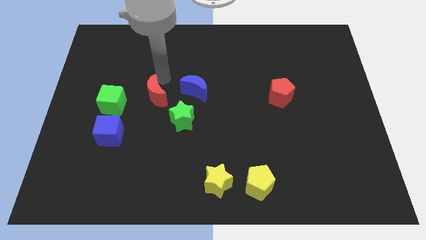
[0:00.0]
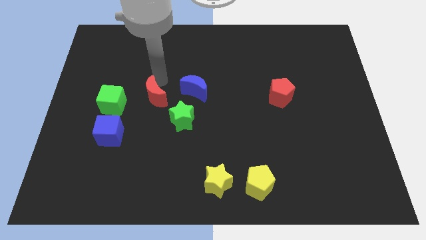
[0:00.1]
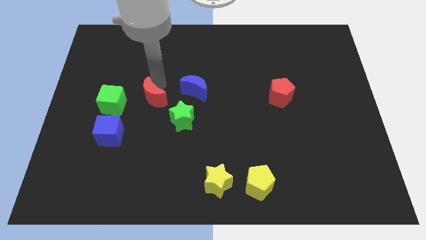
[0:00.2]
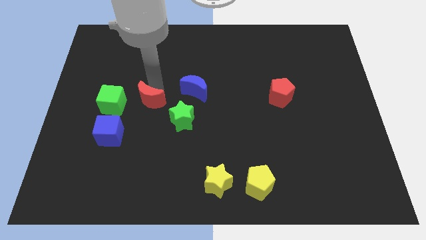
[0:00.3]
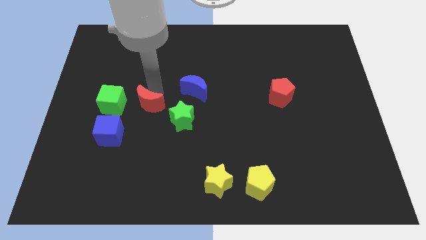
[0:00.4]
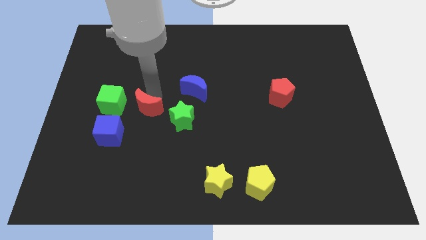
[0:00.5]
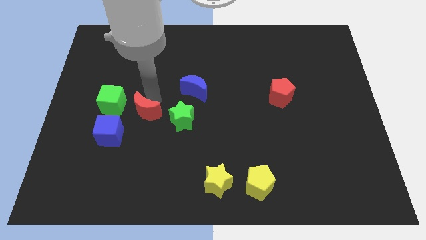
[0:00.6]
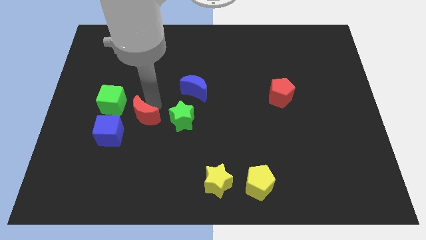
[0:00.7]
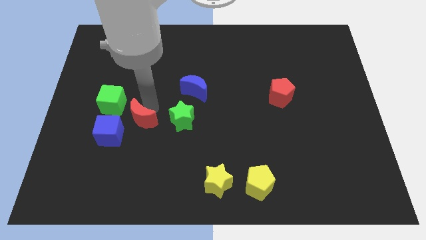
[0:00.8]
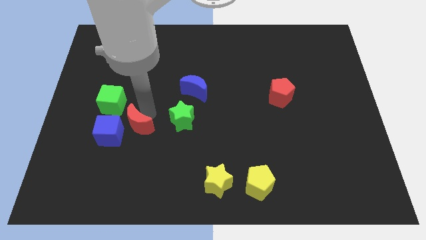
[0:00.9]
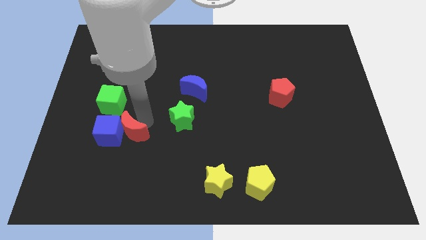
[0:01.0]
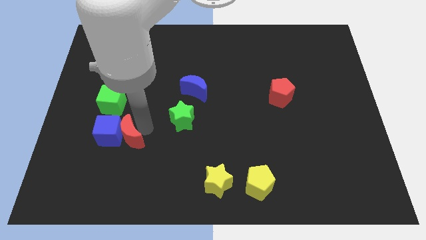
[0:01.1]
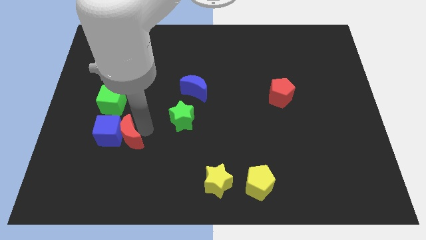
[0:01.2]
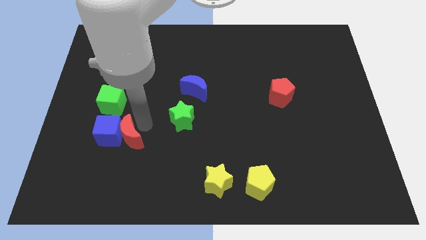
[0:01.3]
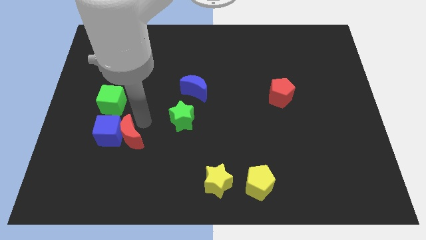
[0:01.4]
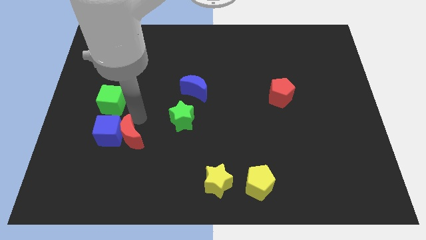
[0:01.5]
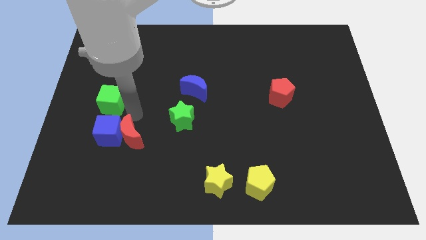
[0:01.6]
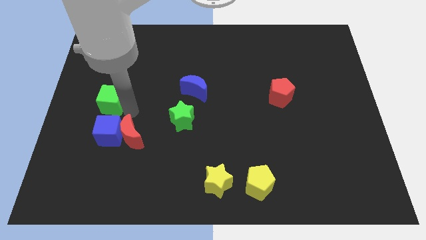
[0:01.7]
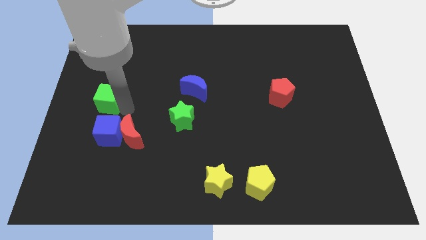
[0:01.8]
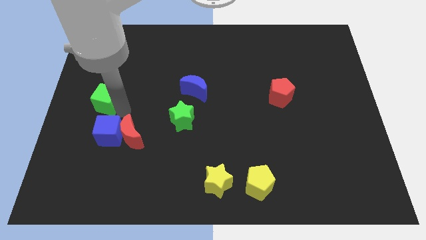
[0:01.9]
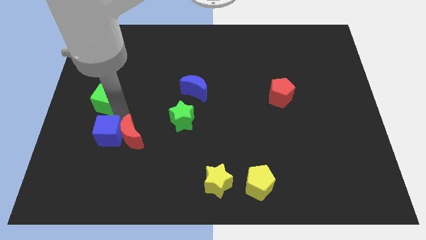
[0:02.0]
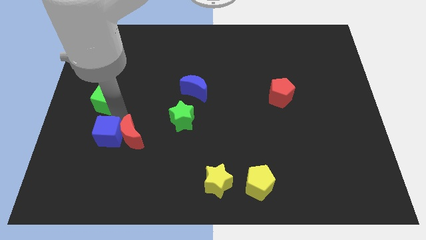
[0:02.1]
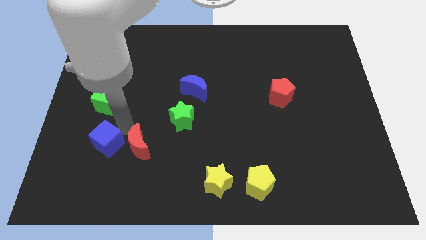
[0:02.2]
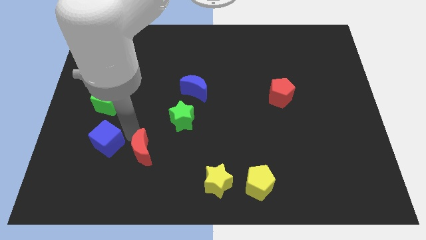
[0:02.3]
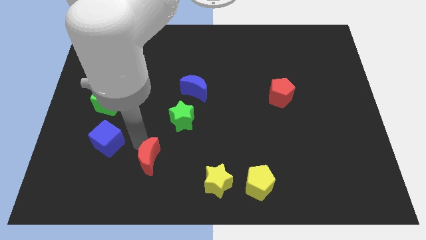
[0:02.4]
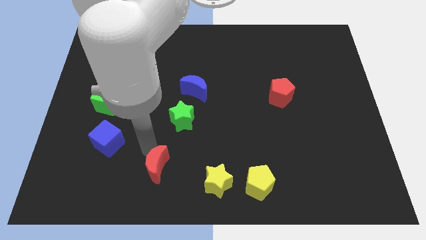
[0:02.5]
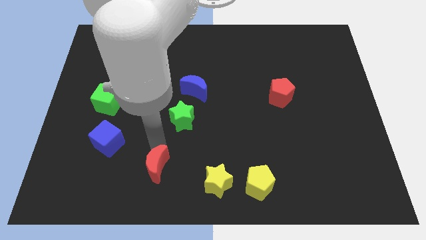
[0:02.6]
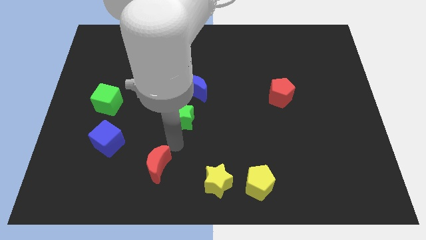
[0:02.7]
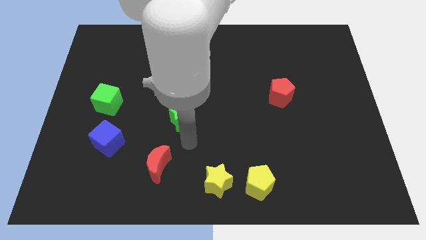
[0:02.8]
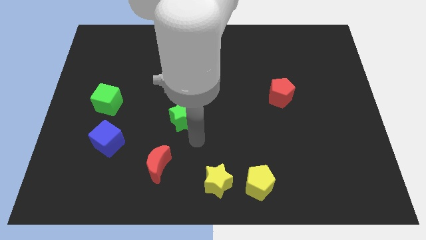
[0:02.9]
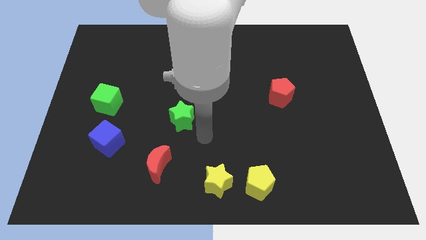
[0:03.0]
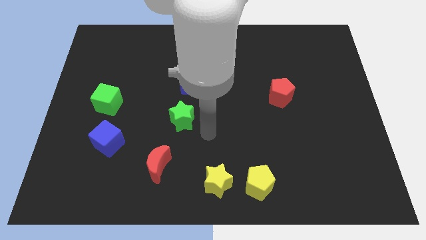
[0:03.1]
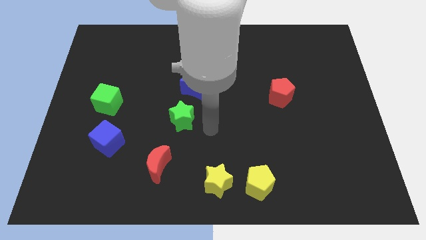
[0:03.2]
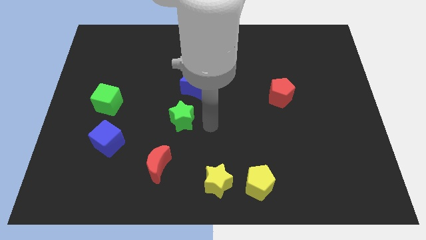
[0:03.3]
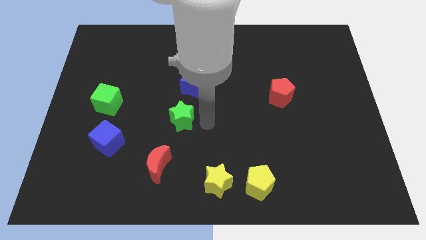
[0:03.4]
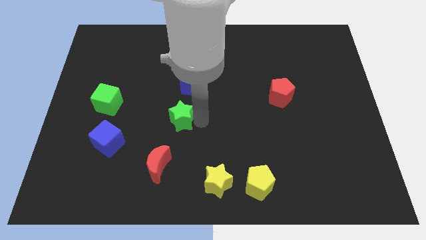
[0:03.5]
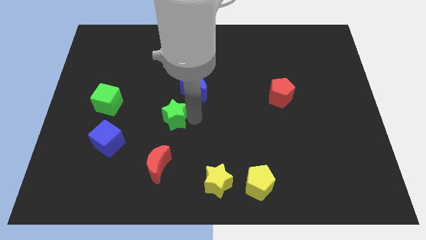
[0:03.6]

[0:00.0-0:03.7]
slide the red crescent diagonally bottom right to the blue cube

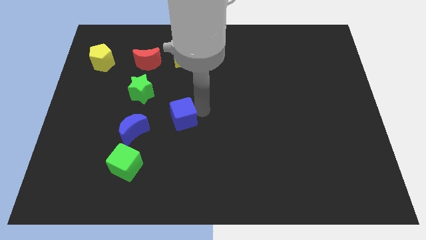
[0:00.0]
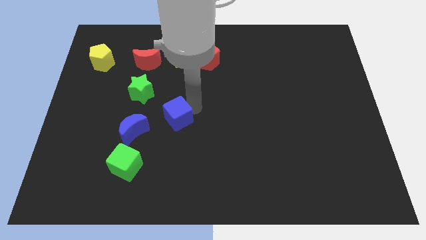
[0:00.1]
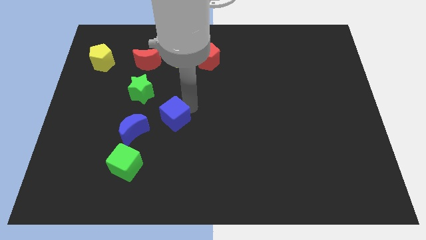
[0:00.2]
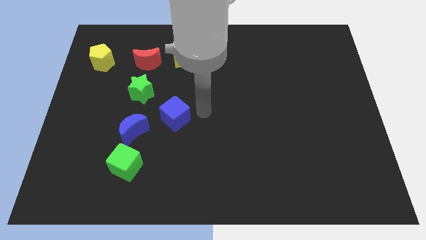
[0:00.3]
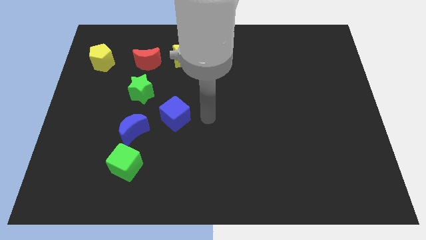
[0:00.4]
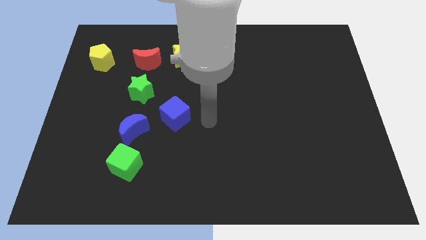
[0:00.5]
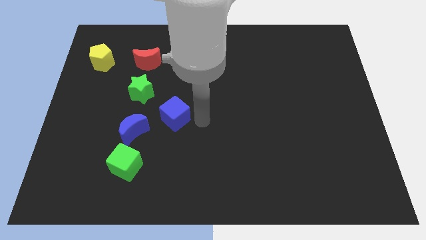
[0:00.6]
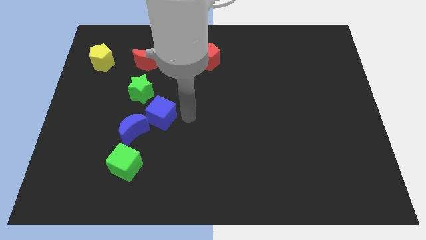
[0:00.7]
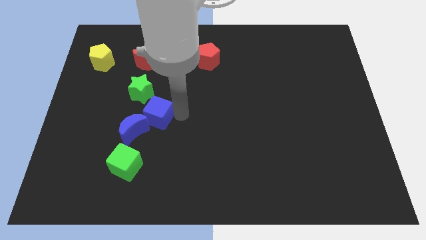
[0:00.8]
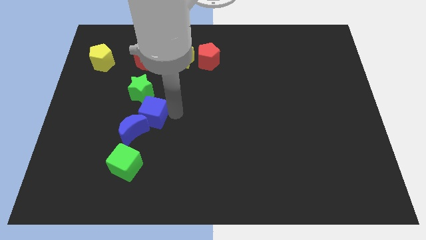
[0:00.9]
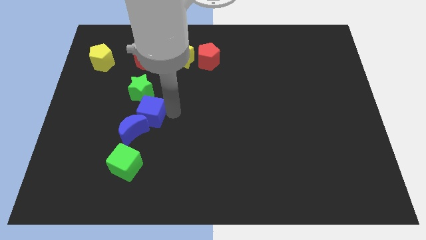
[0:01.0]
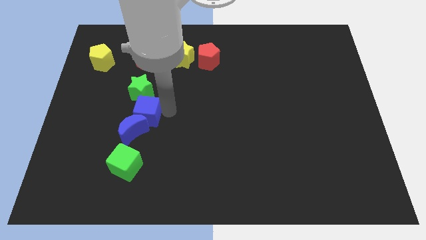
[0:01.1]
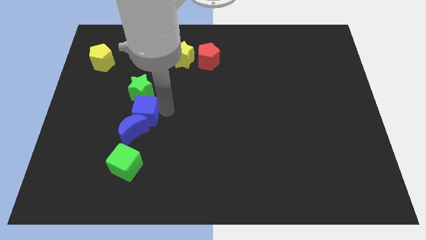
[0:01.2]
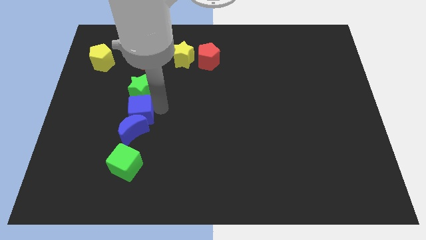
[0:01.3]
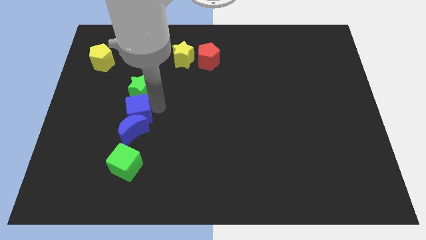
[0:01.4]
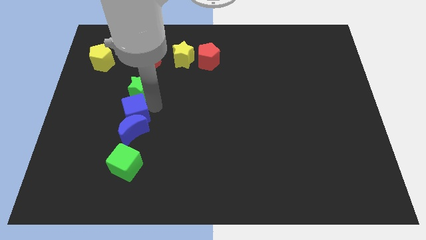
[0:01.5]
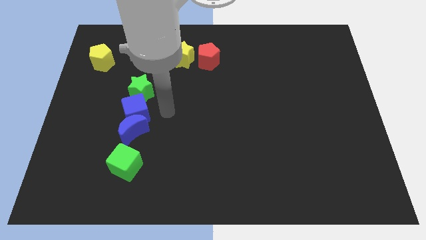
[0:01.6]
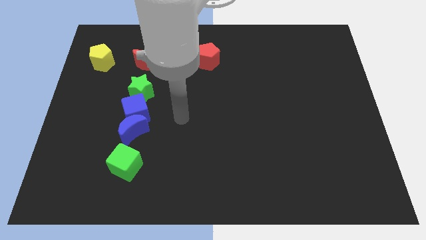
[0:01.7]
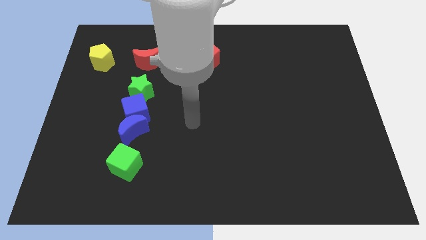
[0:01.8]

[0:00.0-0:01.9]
place blue cube between green star and blue moon

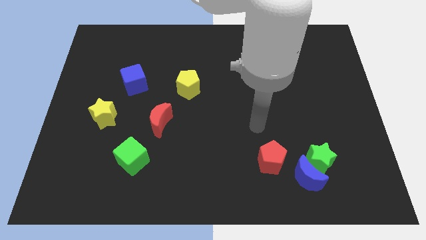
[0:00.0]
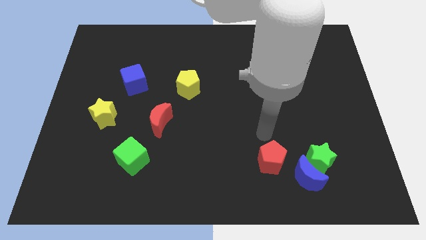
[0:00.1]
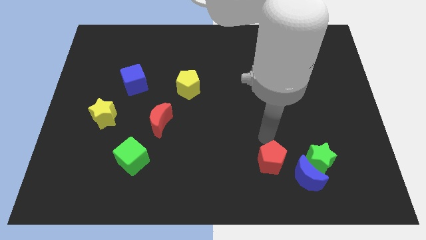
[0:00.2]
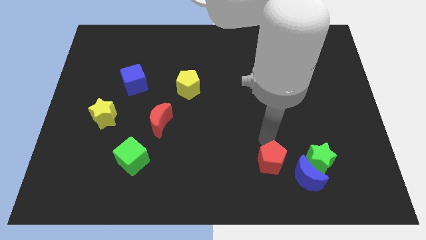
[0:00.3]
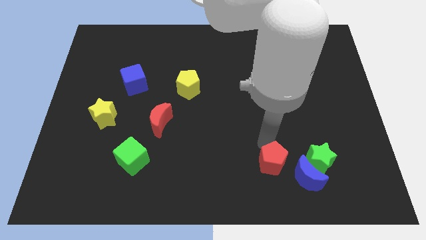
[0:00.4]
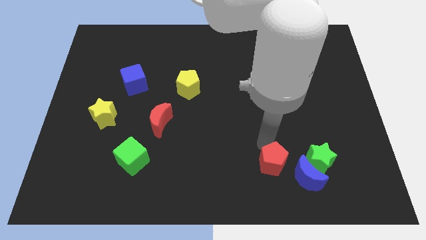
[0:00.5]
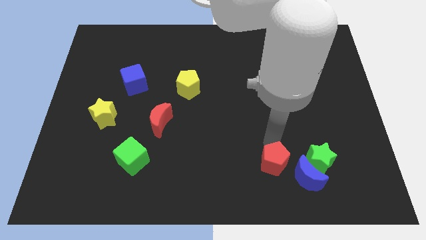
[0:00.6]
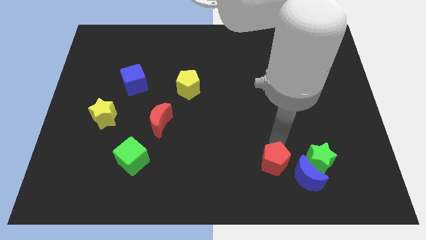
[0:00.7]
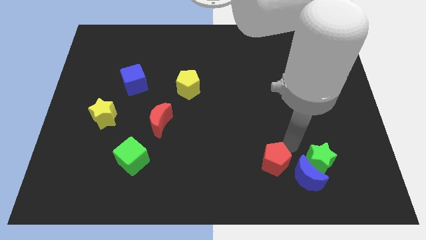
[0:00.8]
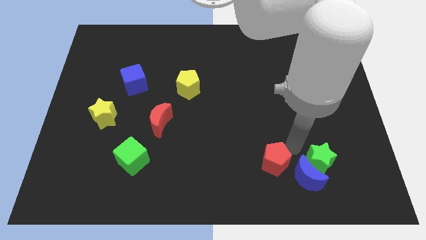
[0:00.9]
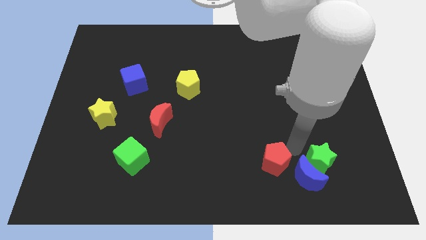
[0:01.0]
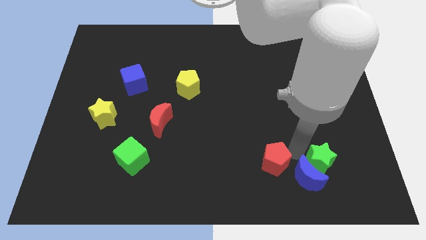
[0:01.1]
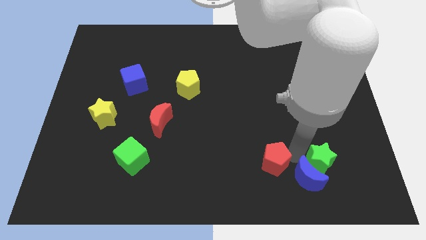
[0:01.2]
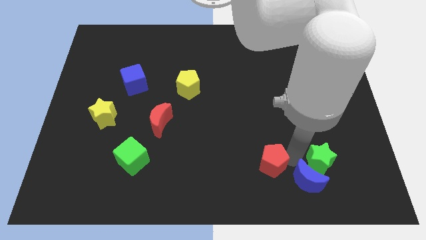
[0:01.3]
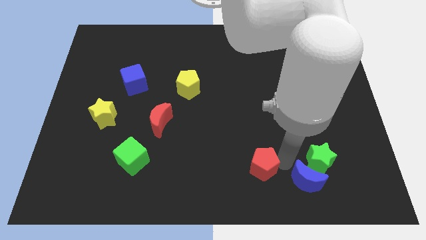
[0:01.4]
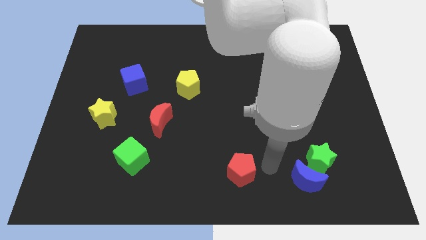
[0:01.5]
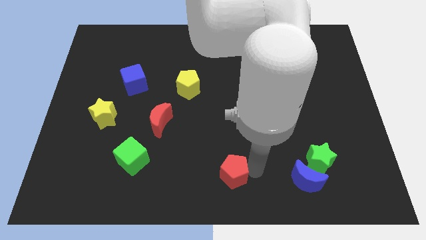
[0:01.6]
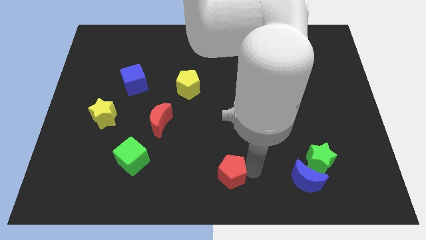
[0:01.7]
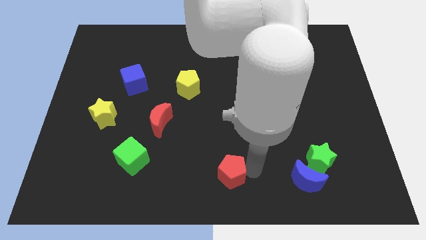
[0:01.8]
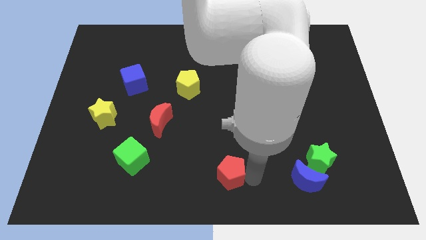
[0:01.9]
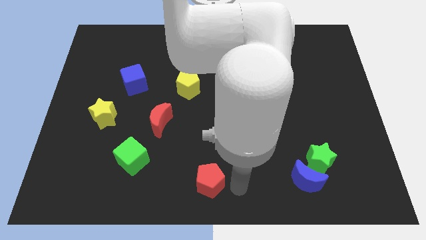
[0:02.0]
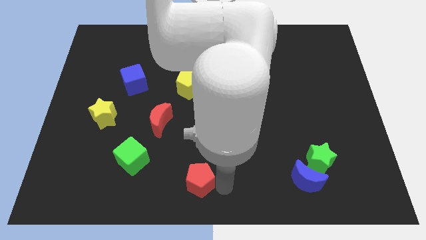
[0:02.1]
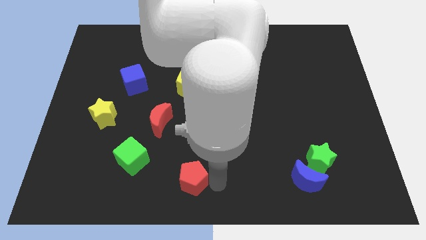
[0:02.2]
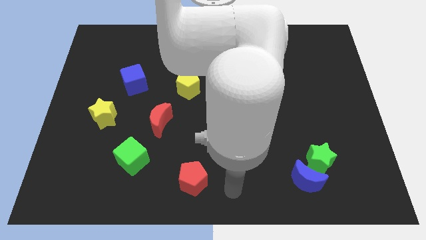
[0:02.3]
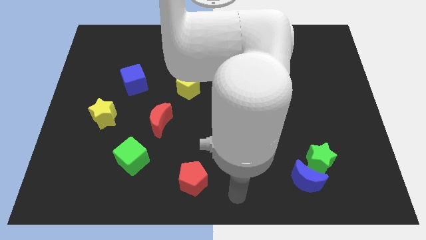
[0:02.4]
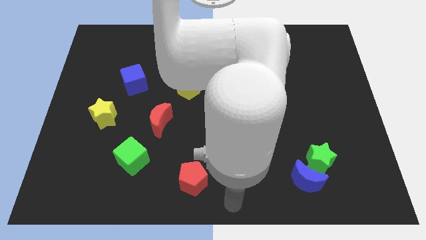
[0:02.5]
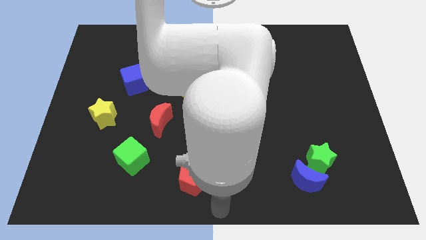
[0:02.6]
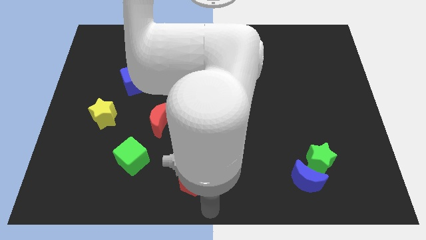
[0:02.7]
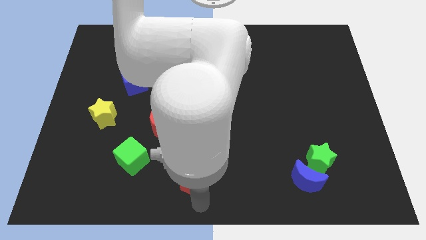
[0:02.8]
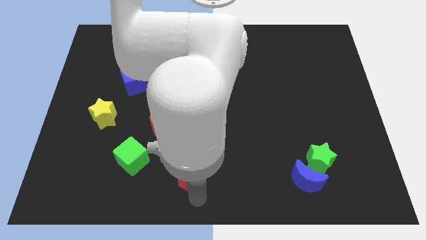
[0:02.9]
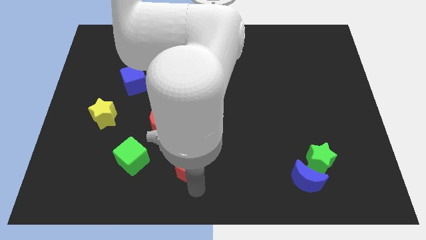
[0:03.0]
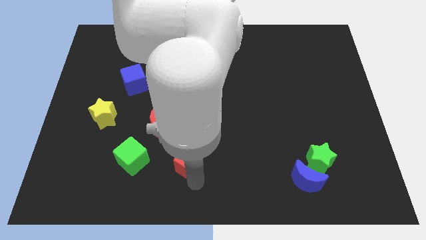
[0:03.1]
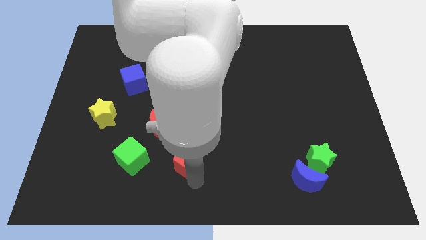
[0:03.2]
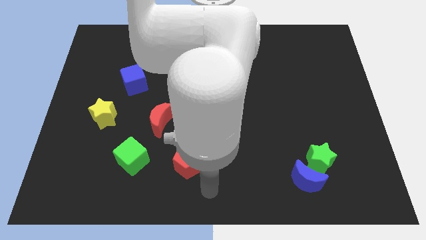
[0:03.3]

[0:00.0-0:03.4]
put red pentagon parallel right to green cube
